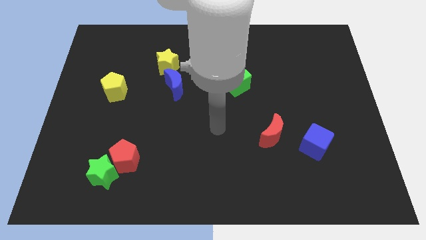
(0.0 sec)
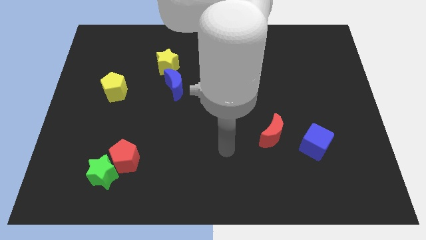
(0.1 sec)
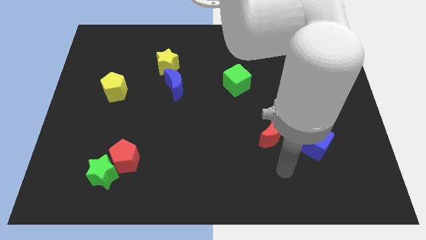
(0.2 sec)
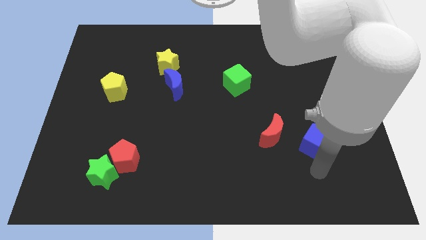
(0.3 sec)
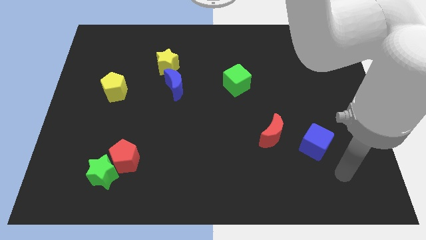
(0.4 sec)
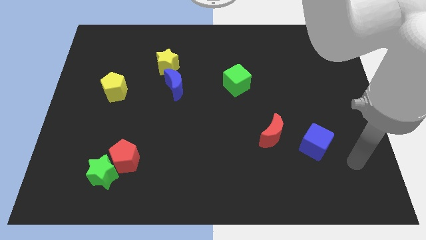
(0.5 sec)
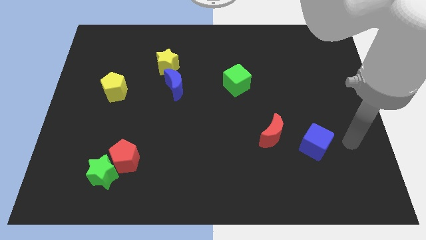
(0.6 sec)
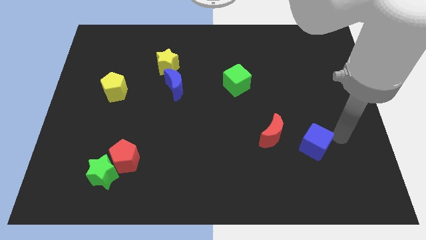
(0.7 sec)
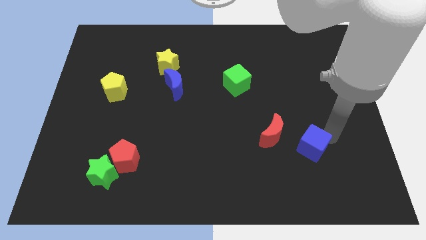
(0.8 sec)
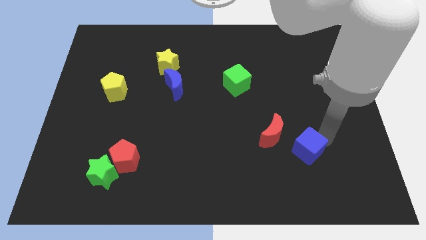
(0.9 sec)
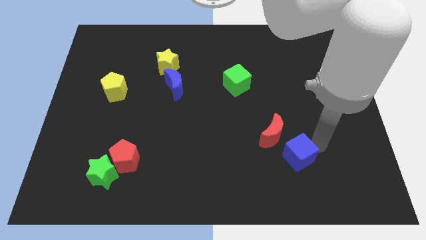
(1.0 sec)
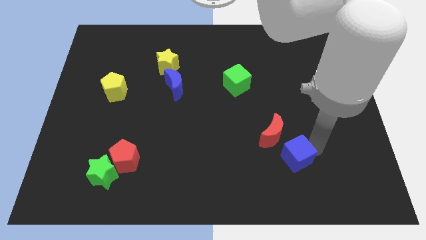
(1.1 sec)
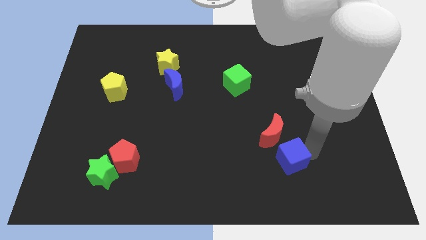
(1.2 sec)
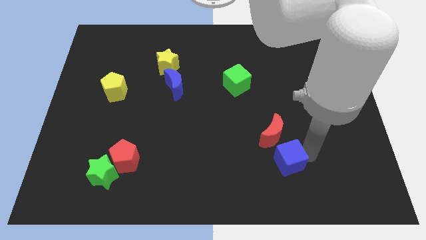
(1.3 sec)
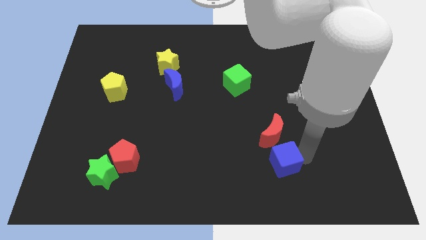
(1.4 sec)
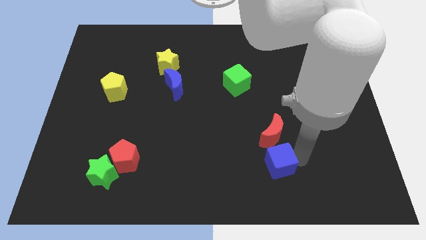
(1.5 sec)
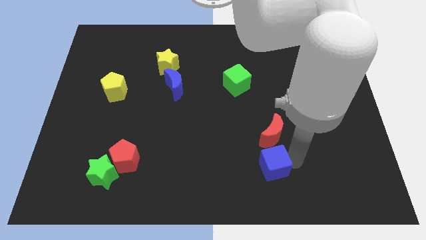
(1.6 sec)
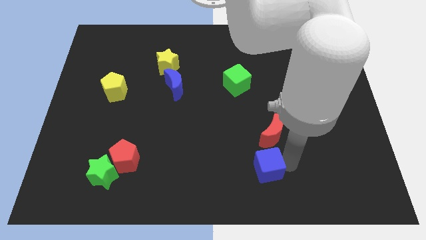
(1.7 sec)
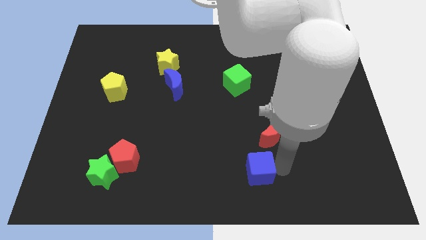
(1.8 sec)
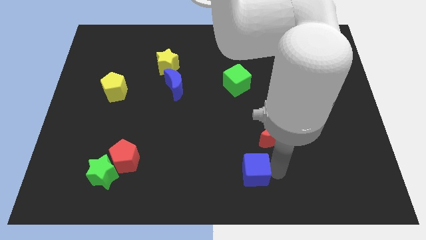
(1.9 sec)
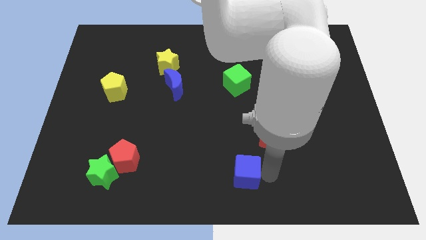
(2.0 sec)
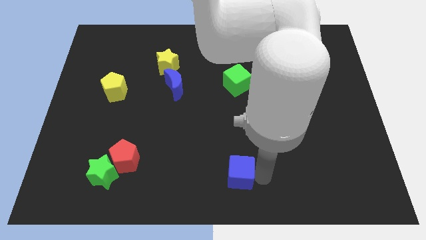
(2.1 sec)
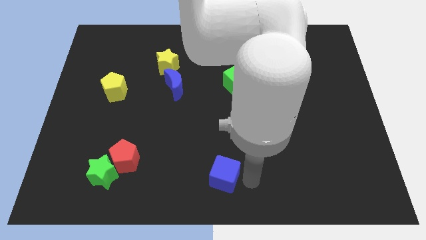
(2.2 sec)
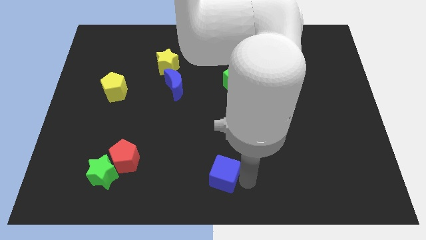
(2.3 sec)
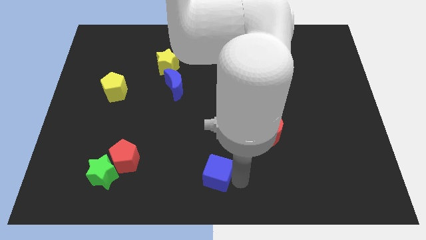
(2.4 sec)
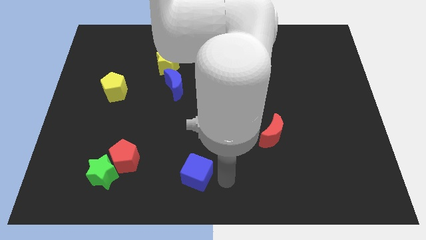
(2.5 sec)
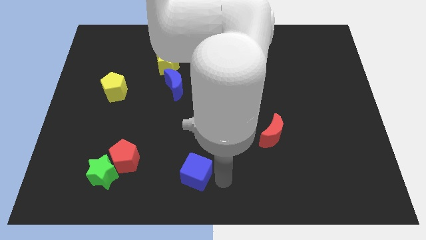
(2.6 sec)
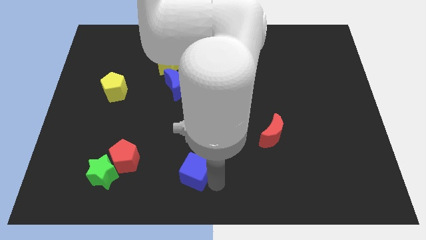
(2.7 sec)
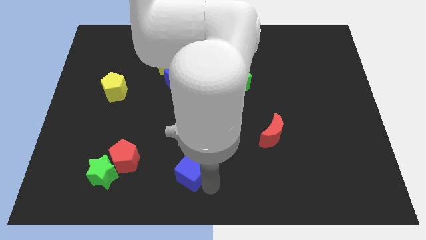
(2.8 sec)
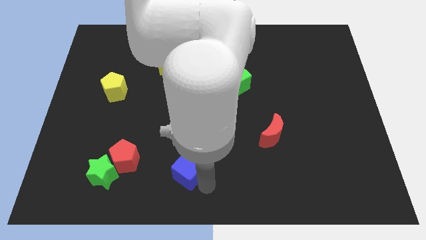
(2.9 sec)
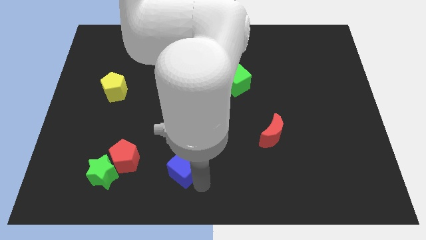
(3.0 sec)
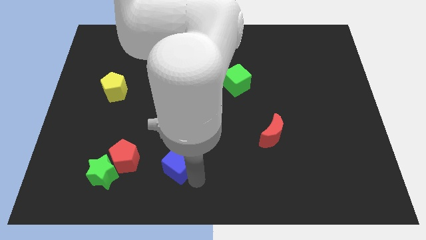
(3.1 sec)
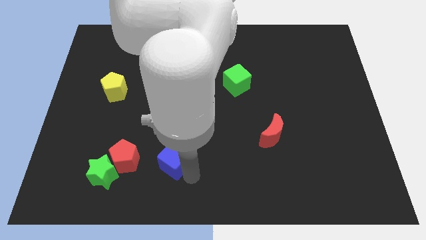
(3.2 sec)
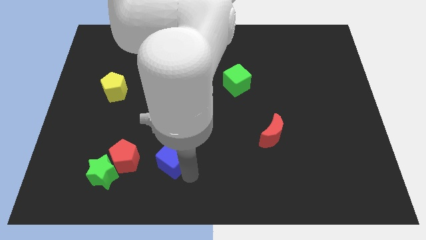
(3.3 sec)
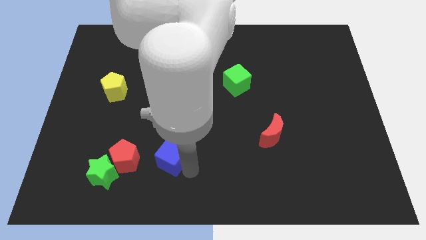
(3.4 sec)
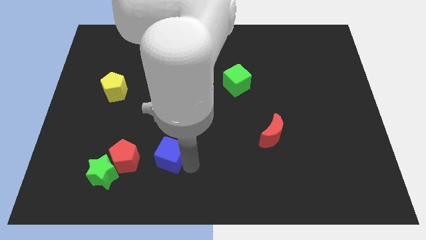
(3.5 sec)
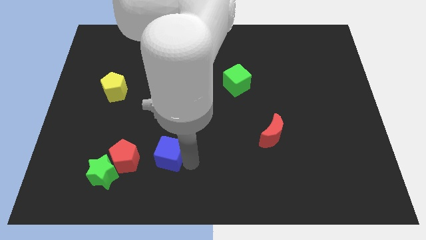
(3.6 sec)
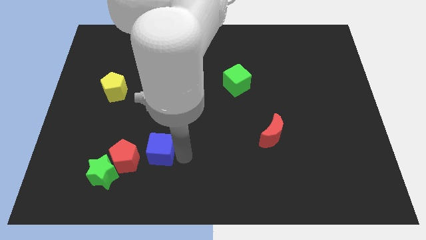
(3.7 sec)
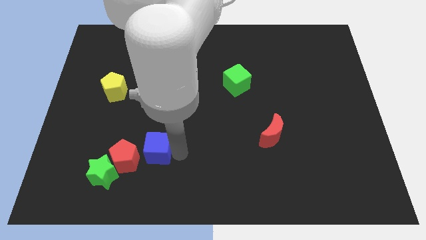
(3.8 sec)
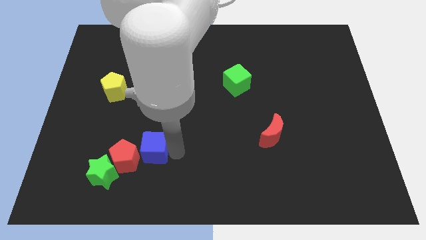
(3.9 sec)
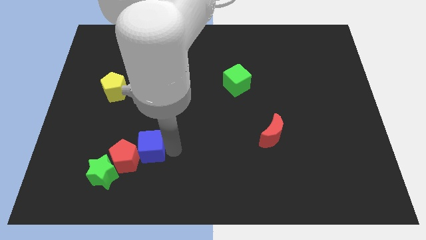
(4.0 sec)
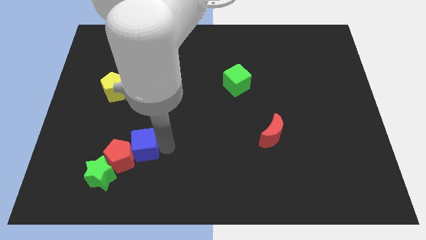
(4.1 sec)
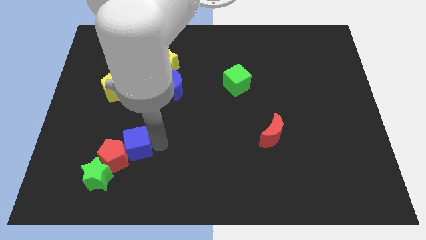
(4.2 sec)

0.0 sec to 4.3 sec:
push the blue cube close to the red pentagon

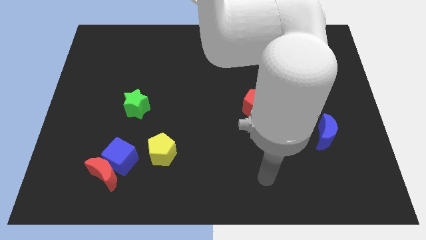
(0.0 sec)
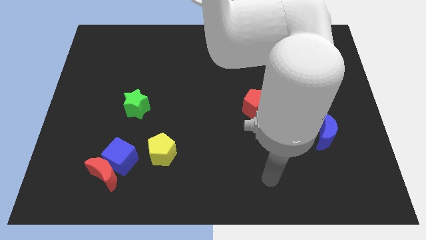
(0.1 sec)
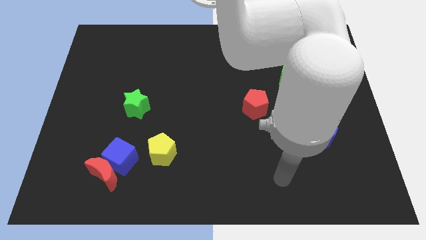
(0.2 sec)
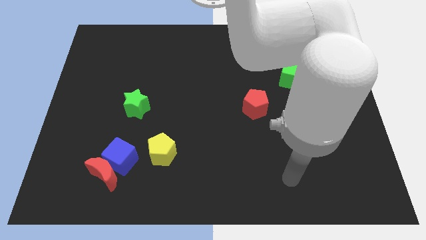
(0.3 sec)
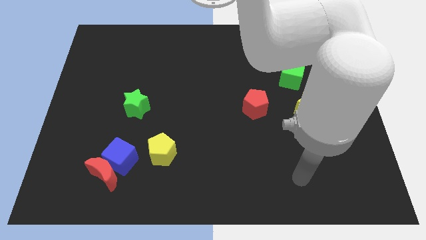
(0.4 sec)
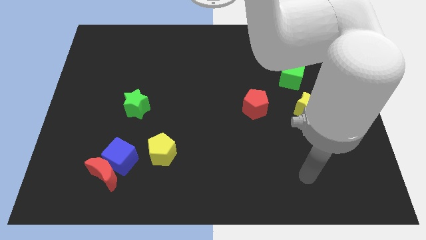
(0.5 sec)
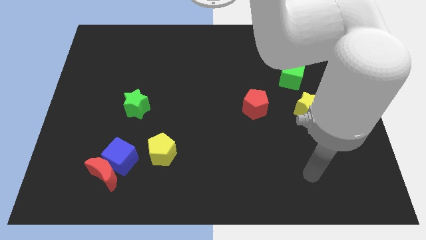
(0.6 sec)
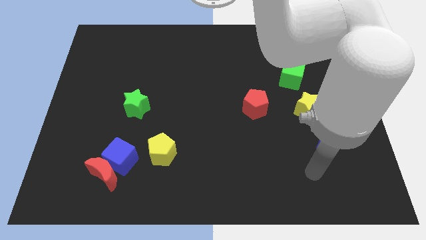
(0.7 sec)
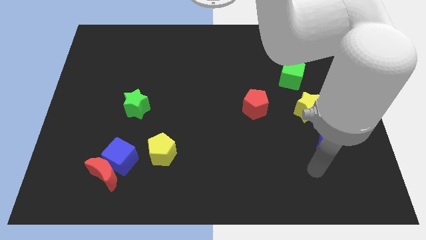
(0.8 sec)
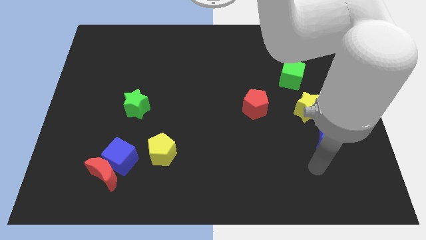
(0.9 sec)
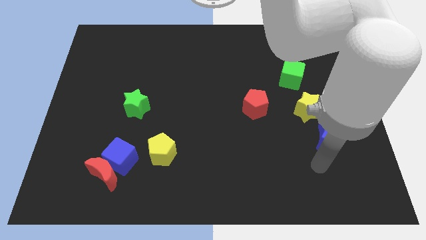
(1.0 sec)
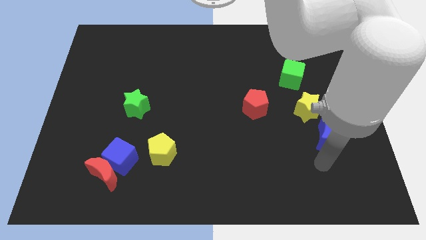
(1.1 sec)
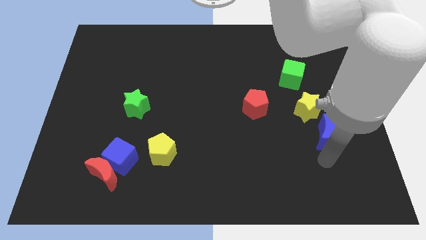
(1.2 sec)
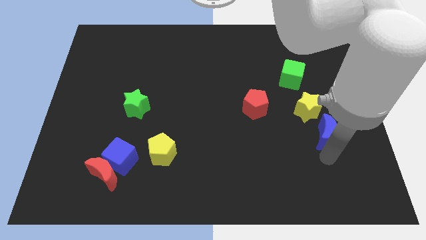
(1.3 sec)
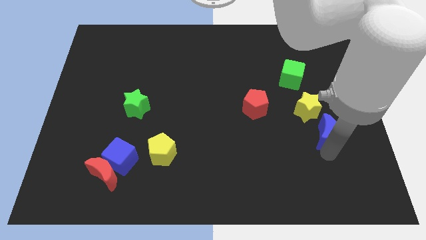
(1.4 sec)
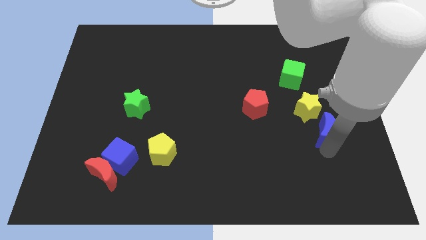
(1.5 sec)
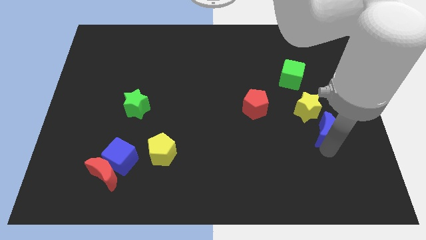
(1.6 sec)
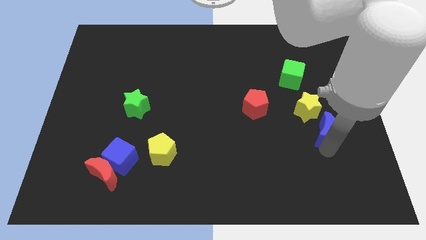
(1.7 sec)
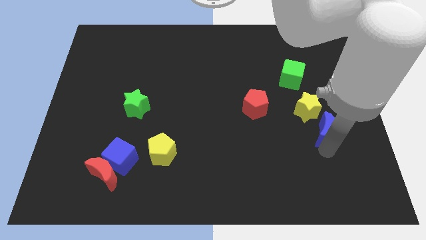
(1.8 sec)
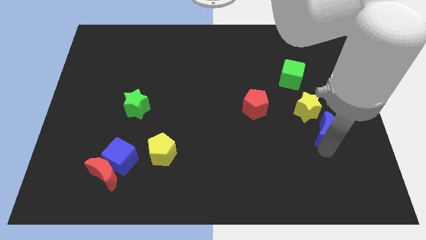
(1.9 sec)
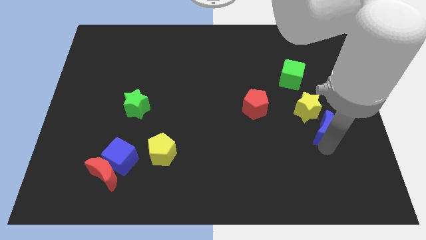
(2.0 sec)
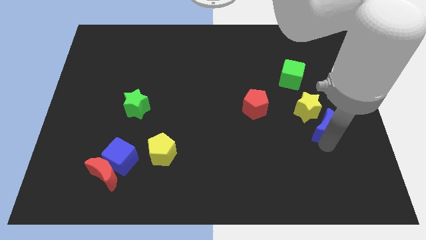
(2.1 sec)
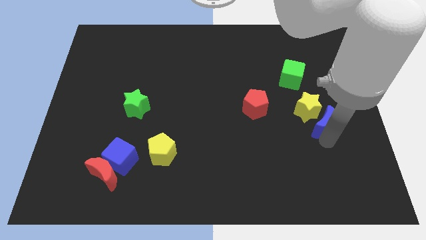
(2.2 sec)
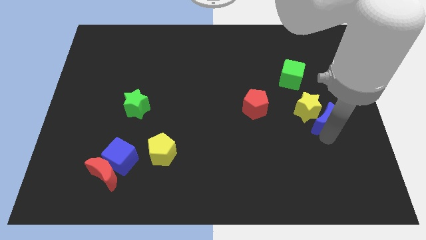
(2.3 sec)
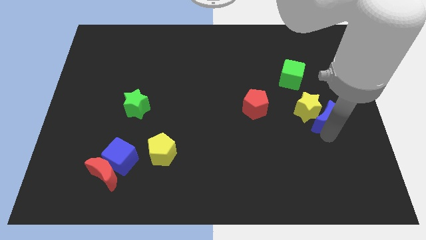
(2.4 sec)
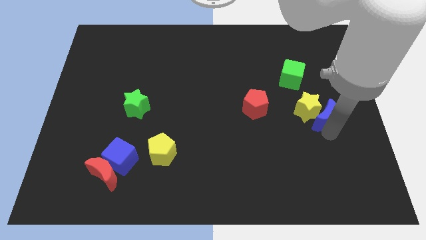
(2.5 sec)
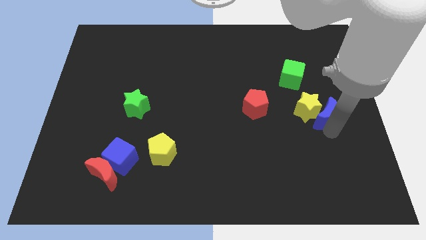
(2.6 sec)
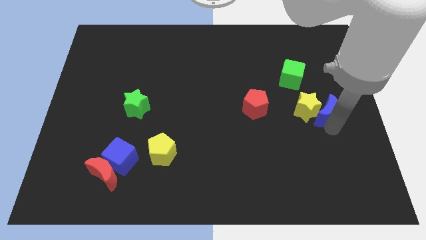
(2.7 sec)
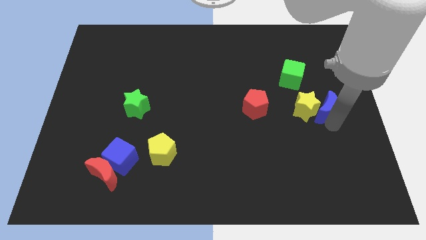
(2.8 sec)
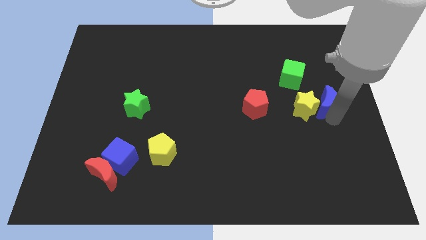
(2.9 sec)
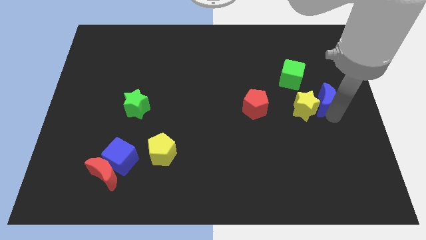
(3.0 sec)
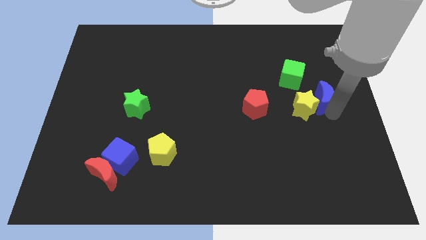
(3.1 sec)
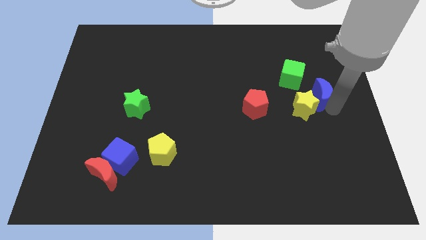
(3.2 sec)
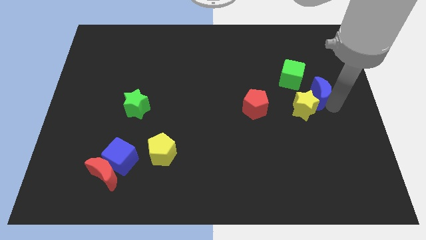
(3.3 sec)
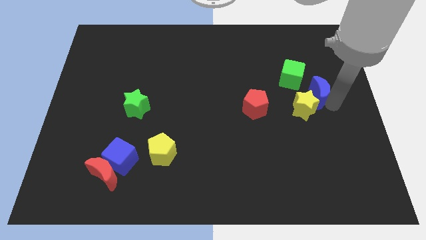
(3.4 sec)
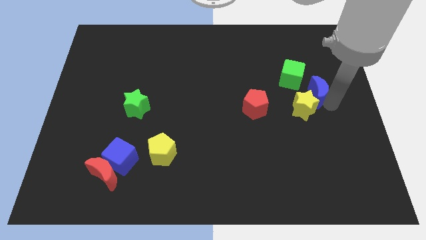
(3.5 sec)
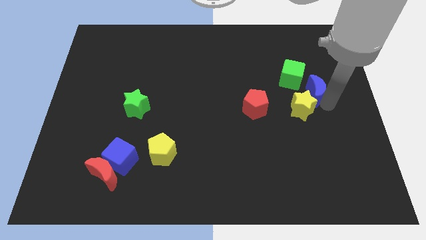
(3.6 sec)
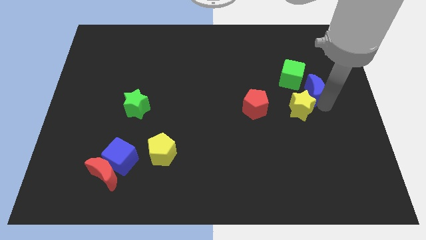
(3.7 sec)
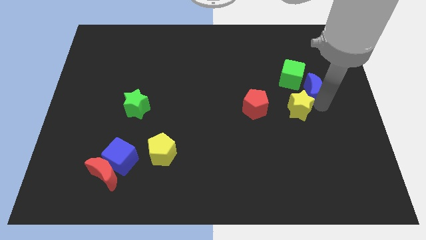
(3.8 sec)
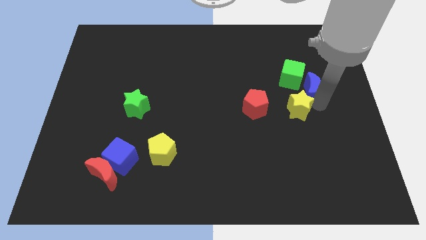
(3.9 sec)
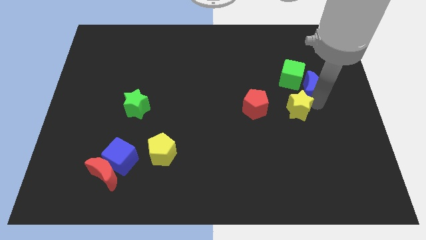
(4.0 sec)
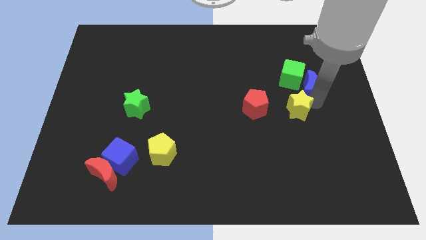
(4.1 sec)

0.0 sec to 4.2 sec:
slide the blue moon close to the green cube
